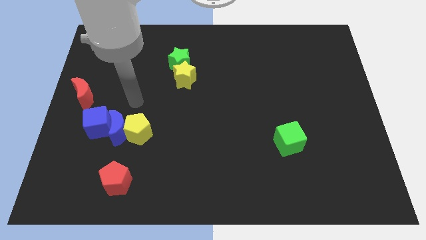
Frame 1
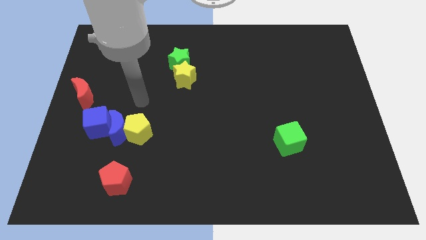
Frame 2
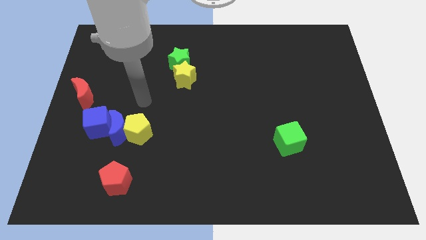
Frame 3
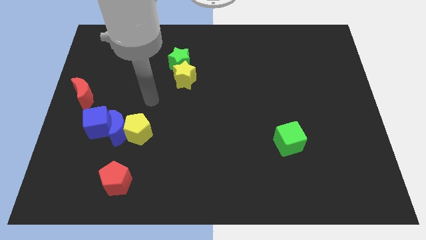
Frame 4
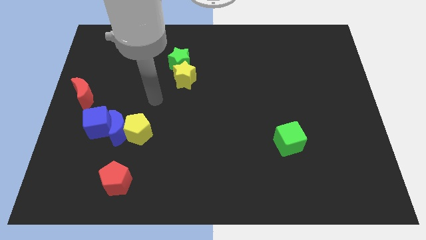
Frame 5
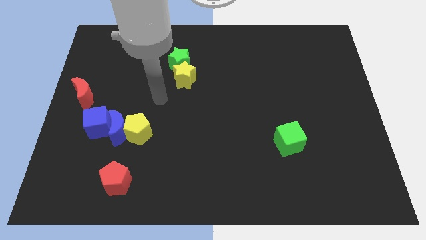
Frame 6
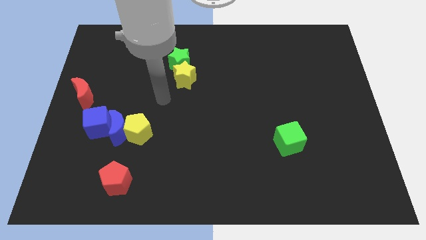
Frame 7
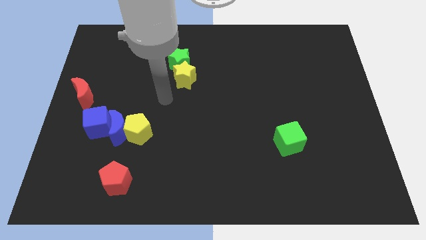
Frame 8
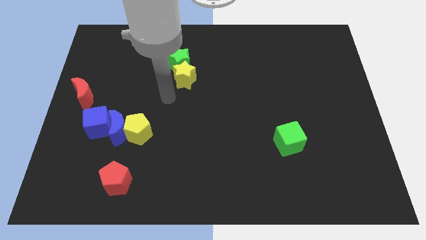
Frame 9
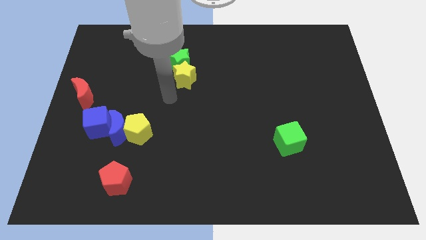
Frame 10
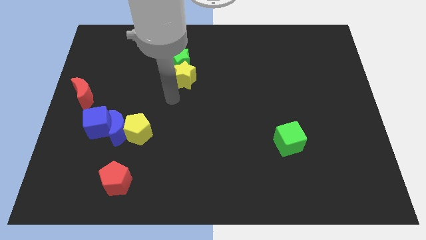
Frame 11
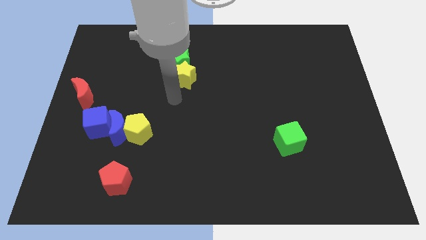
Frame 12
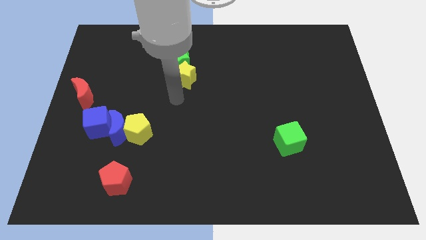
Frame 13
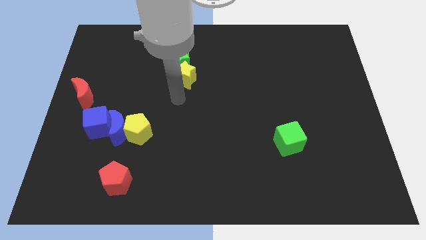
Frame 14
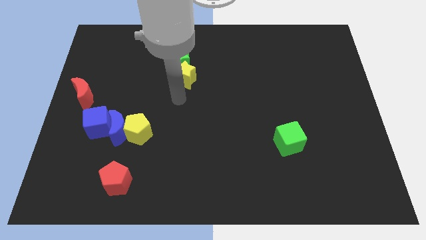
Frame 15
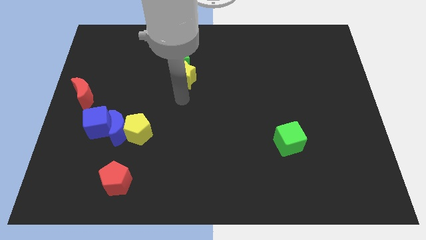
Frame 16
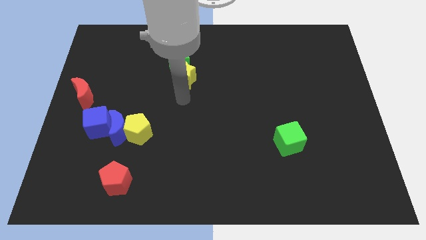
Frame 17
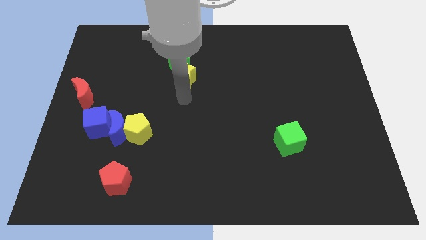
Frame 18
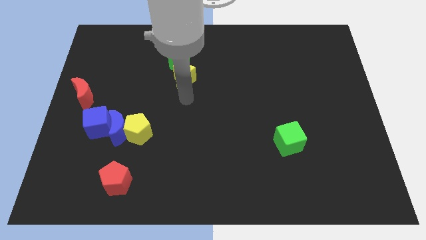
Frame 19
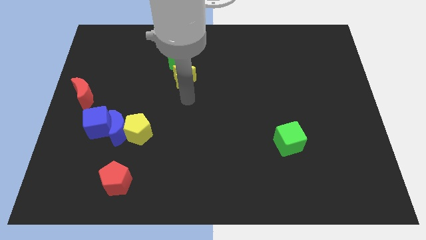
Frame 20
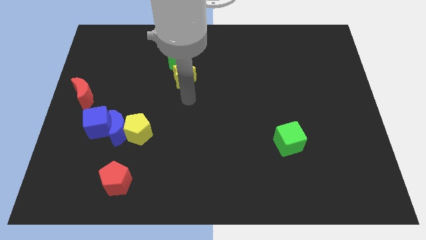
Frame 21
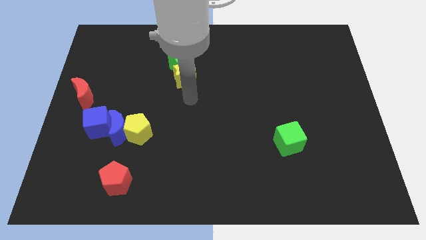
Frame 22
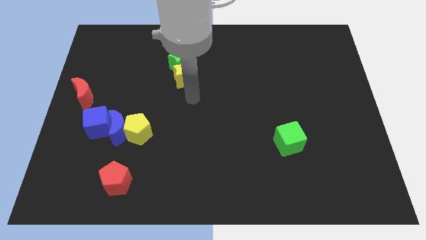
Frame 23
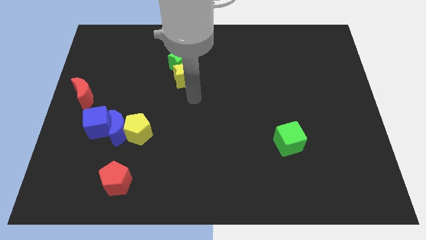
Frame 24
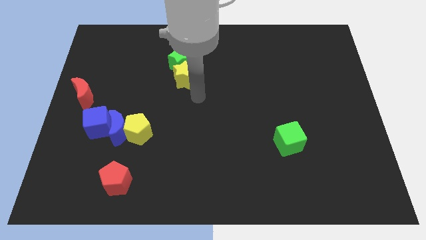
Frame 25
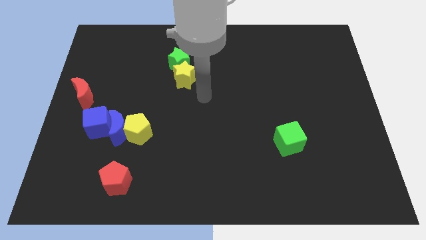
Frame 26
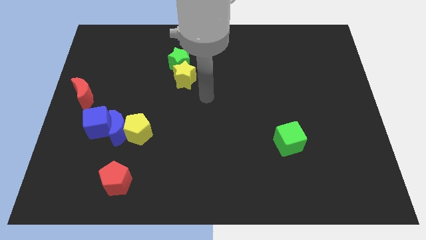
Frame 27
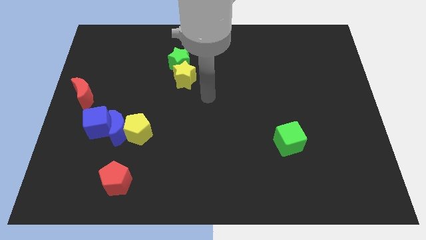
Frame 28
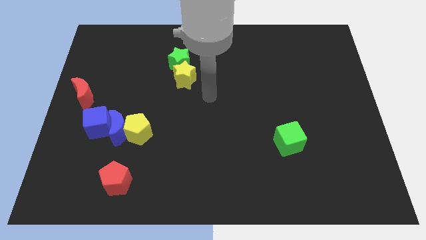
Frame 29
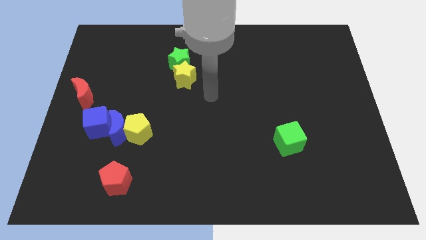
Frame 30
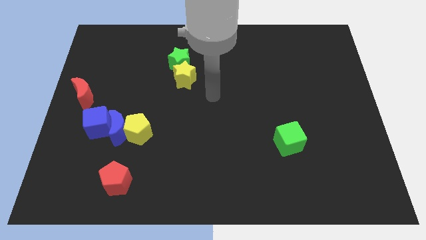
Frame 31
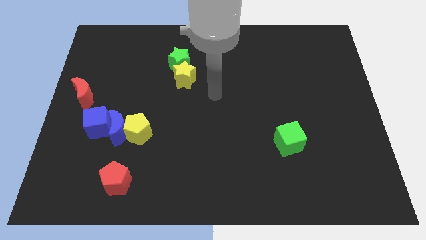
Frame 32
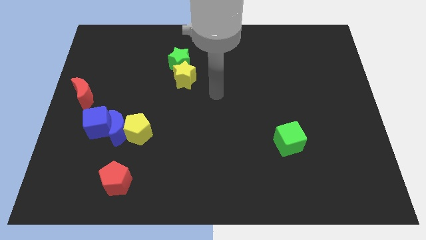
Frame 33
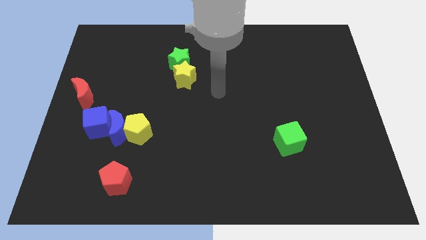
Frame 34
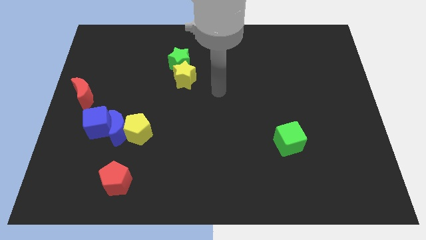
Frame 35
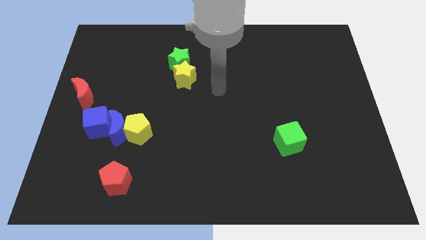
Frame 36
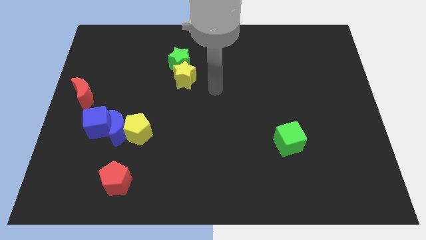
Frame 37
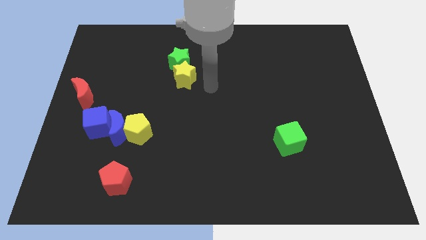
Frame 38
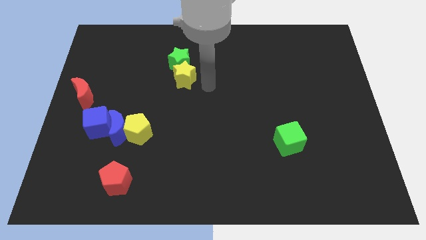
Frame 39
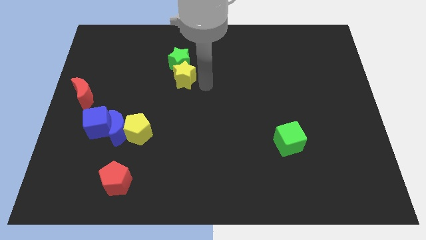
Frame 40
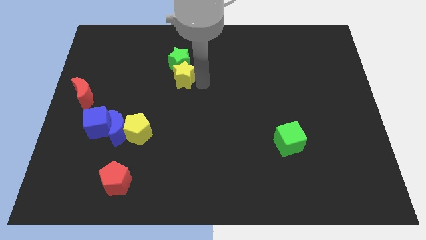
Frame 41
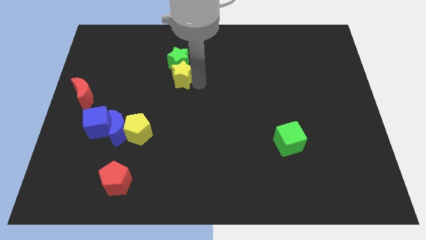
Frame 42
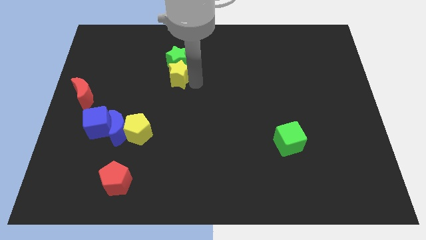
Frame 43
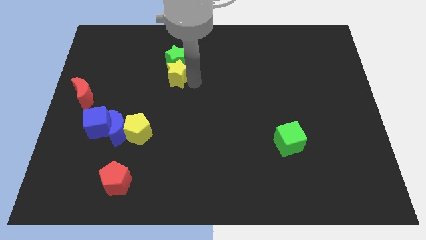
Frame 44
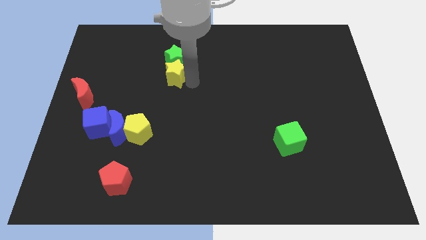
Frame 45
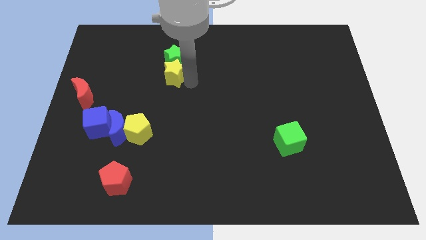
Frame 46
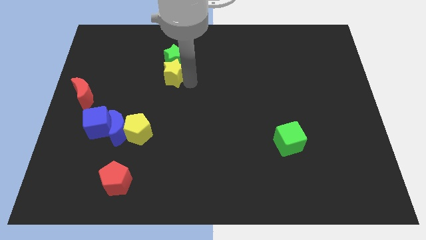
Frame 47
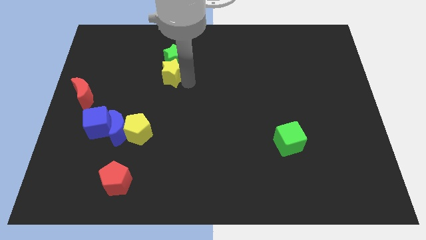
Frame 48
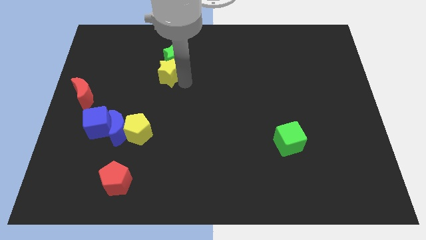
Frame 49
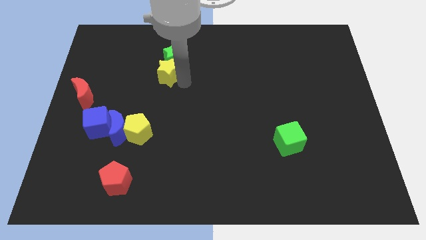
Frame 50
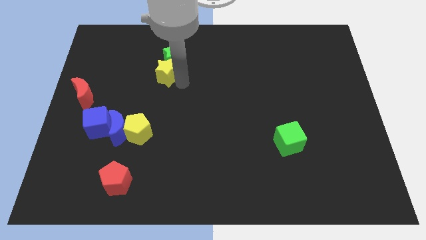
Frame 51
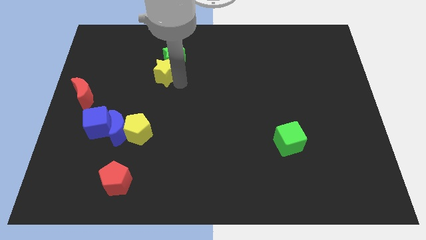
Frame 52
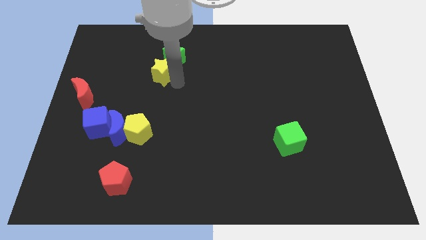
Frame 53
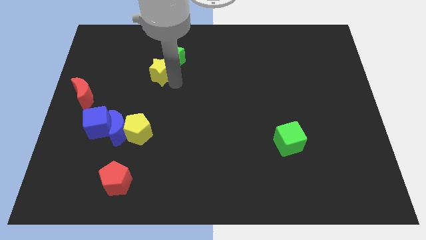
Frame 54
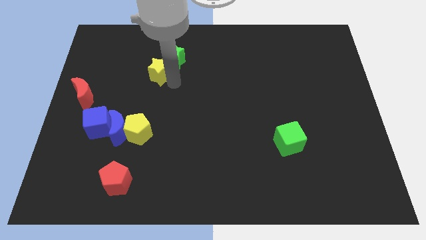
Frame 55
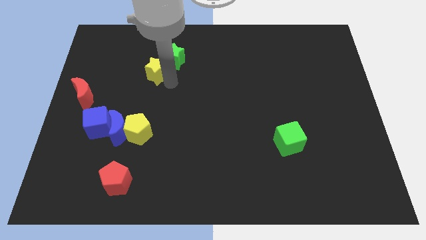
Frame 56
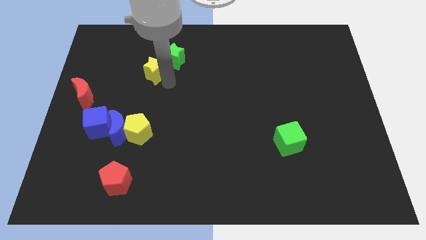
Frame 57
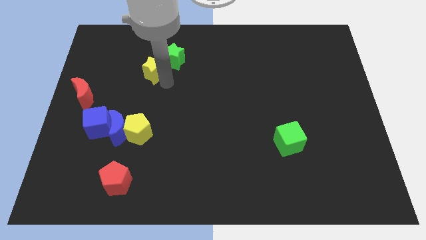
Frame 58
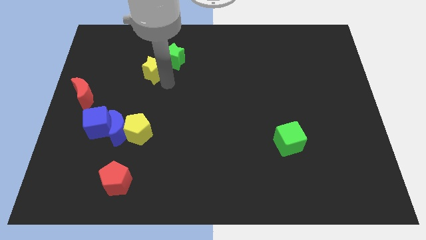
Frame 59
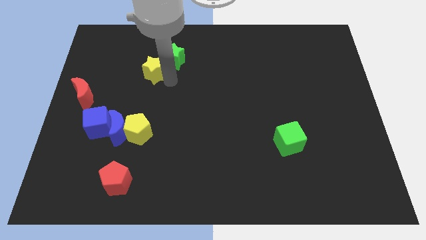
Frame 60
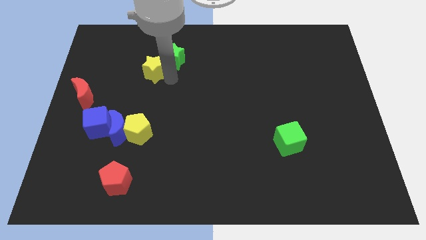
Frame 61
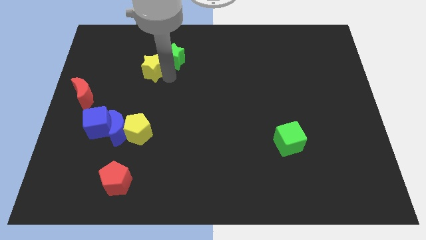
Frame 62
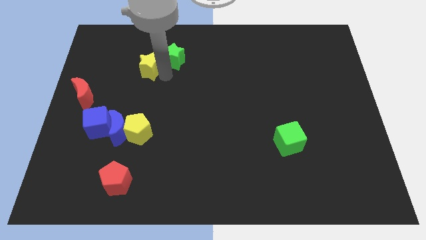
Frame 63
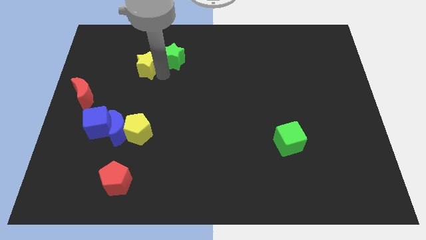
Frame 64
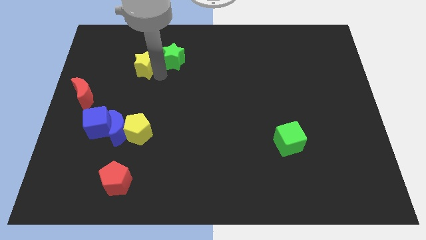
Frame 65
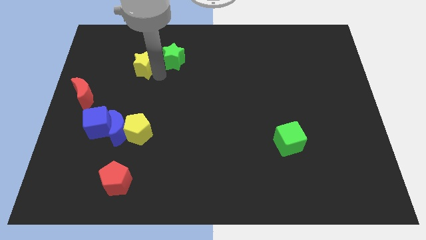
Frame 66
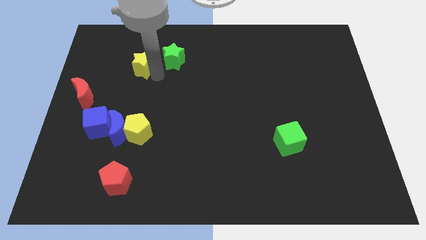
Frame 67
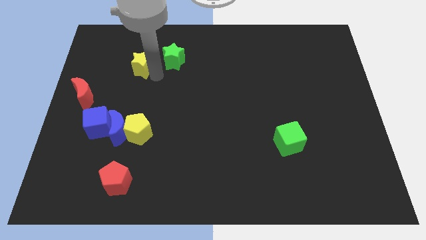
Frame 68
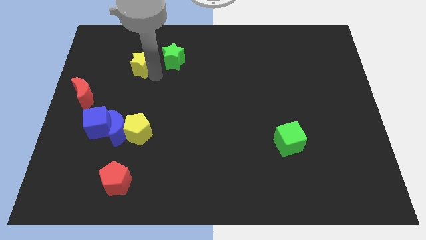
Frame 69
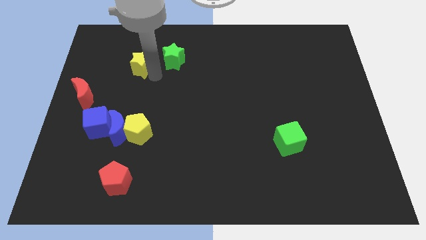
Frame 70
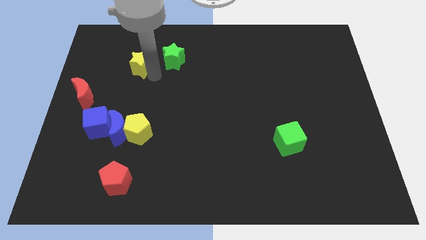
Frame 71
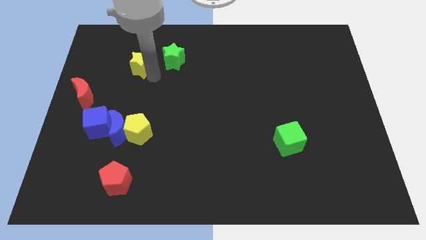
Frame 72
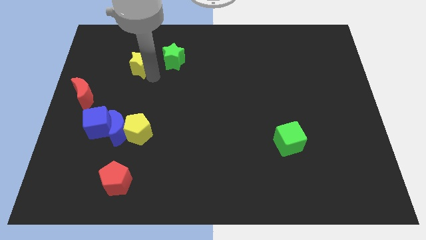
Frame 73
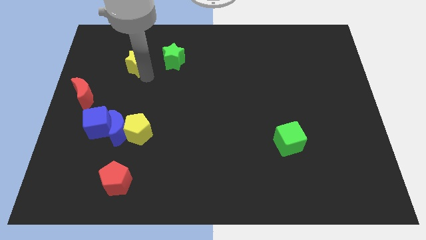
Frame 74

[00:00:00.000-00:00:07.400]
separate the yellow star from the green star

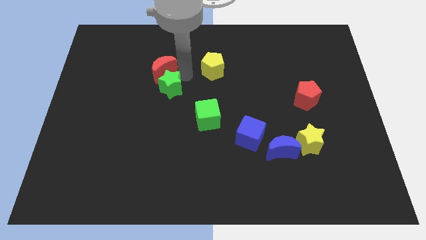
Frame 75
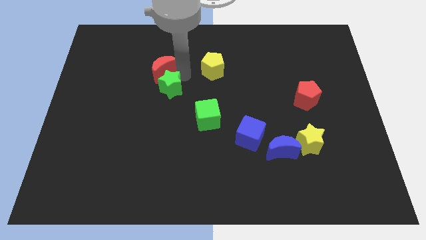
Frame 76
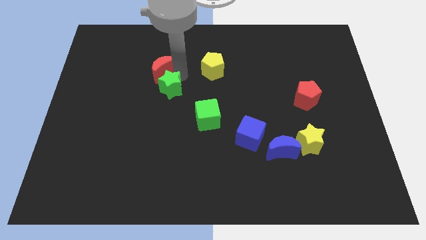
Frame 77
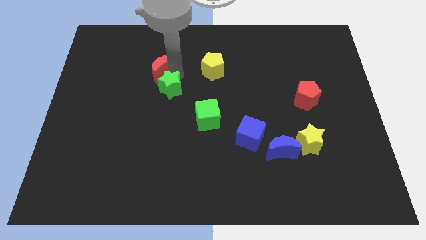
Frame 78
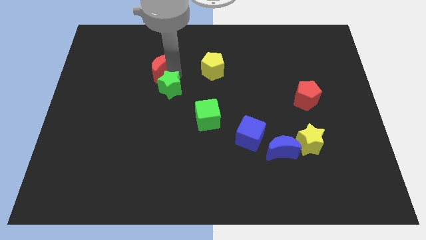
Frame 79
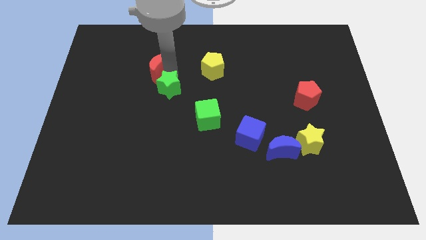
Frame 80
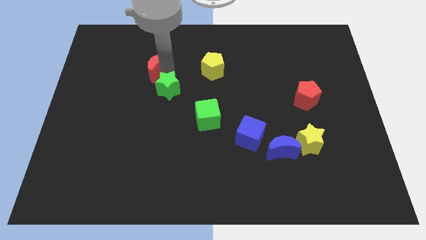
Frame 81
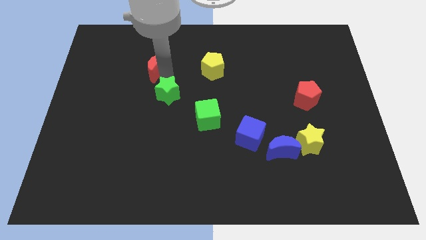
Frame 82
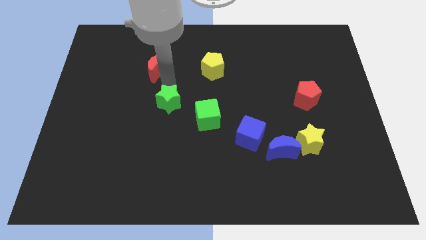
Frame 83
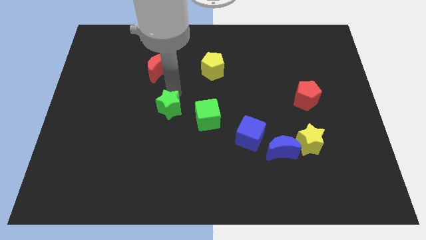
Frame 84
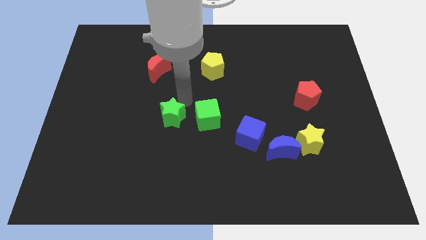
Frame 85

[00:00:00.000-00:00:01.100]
push the green star left to the green cube

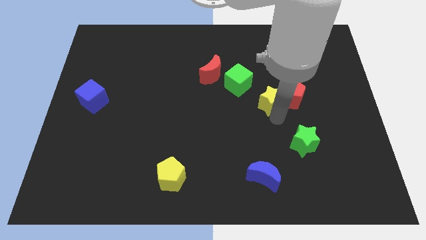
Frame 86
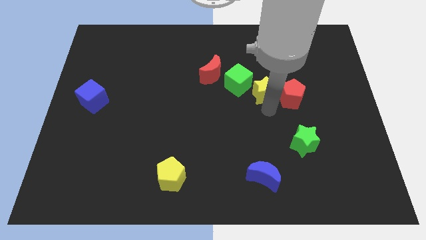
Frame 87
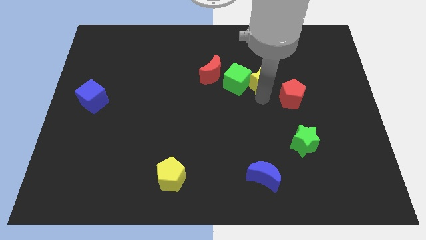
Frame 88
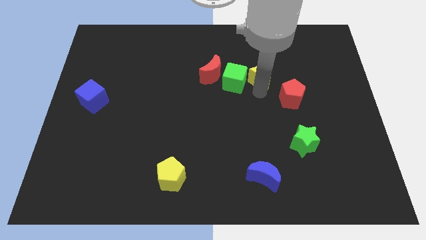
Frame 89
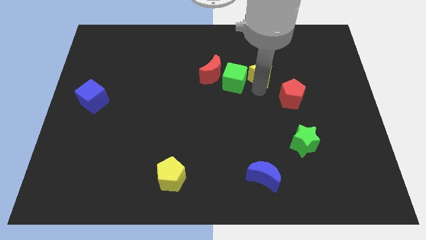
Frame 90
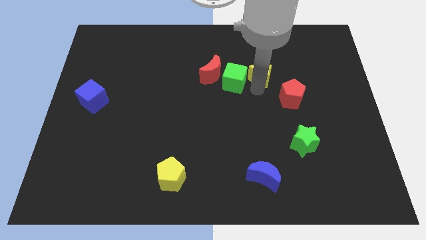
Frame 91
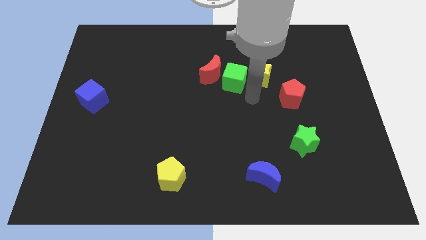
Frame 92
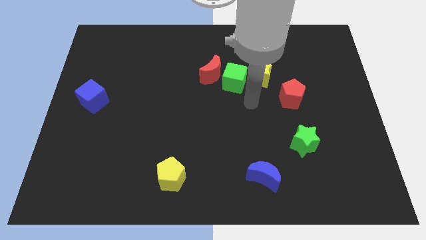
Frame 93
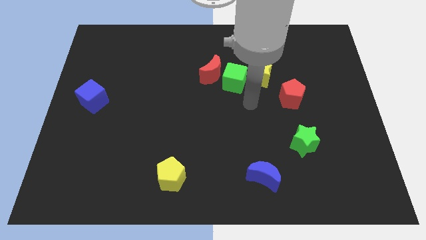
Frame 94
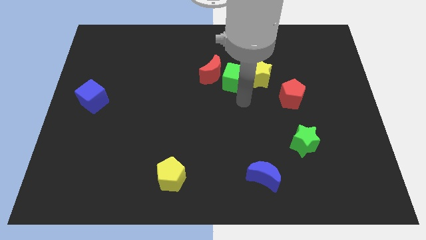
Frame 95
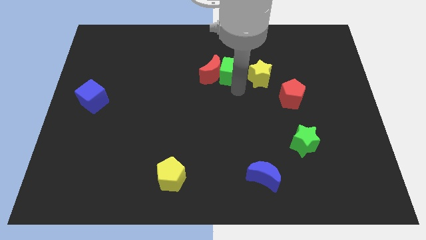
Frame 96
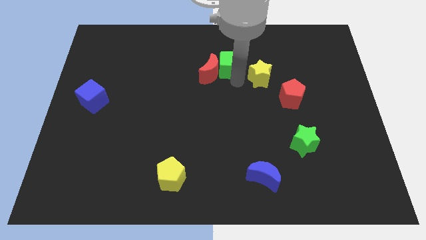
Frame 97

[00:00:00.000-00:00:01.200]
push the yellow star to the top
